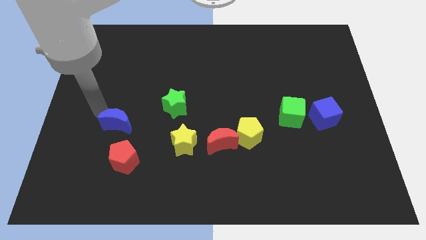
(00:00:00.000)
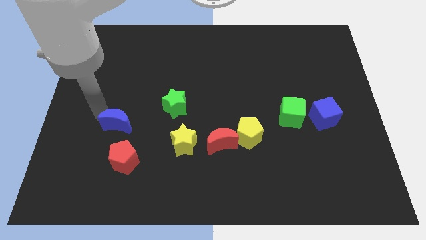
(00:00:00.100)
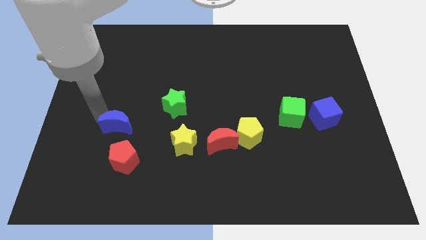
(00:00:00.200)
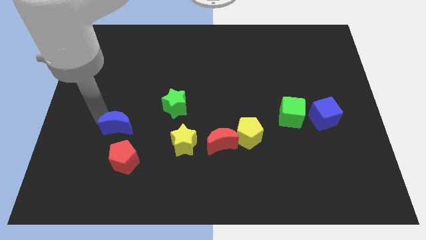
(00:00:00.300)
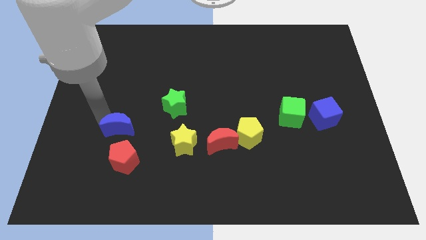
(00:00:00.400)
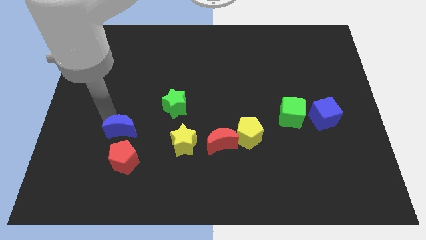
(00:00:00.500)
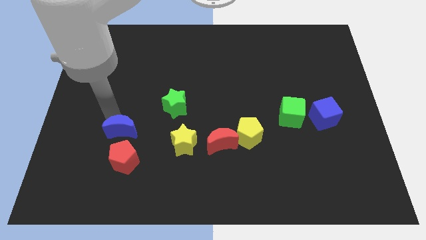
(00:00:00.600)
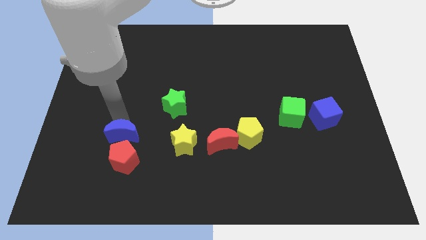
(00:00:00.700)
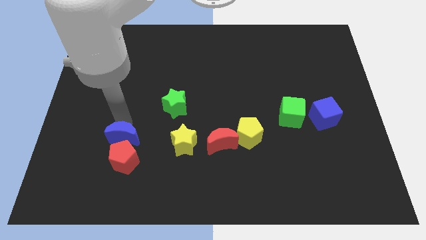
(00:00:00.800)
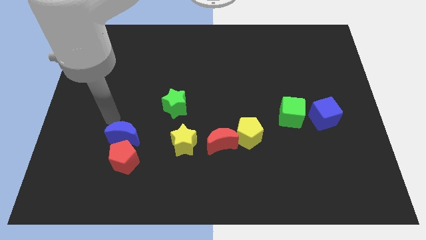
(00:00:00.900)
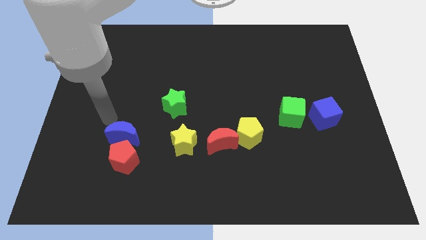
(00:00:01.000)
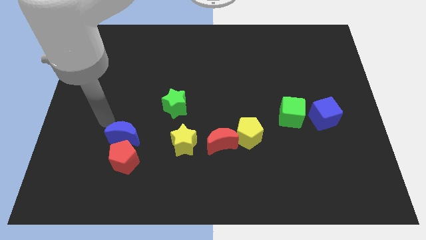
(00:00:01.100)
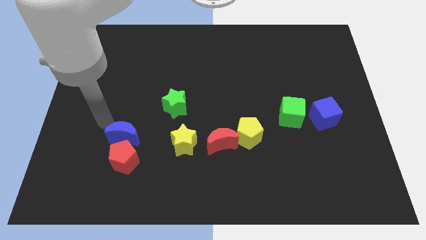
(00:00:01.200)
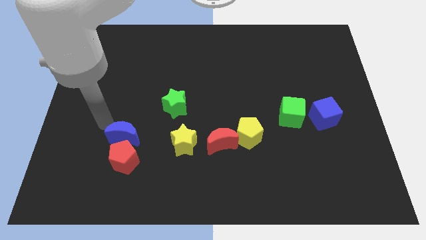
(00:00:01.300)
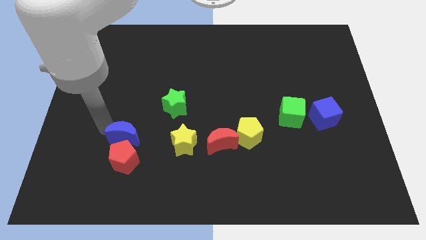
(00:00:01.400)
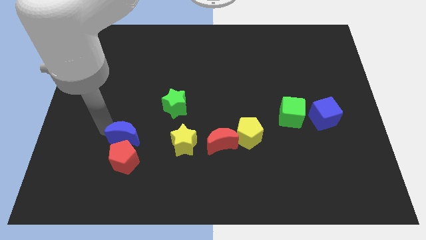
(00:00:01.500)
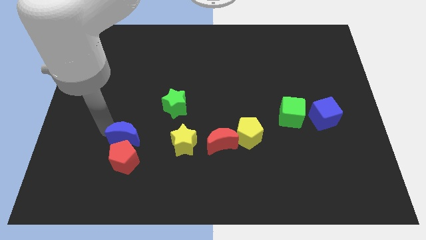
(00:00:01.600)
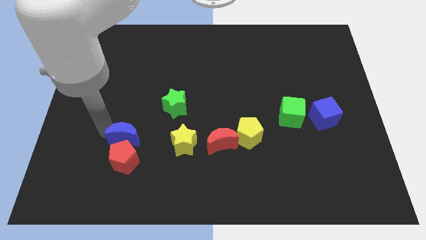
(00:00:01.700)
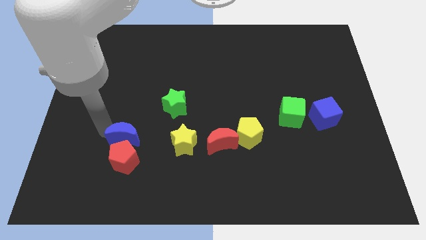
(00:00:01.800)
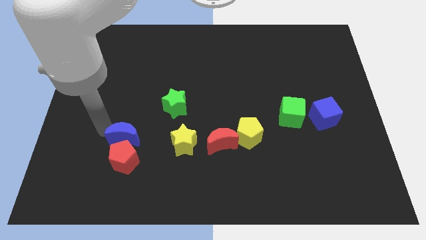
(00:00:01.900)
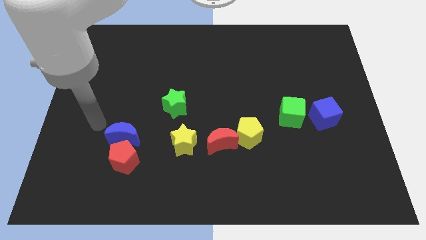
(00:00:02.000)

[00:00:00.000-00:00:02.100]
move blue moon into red pentagon

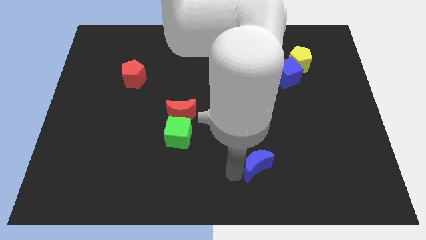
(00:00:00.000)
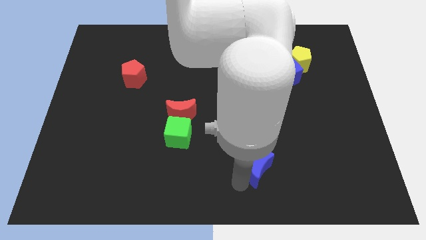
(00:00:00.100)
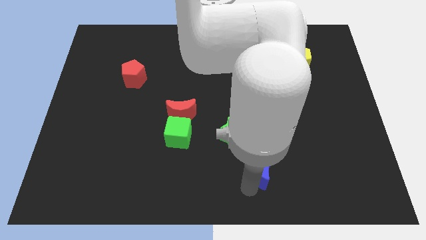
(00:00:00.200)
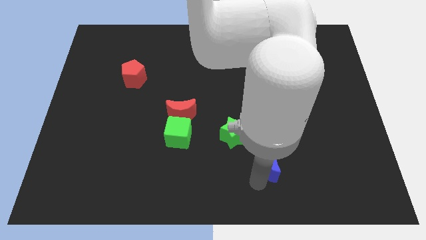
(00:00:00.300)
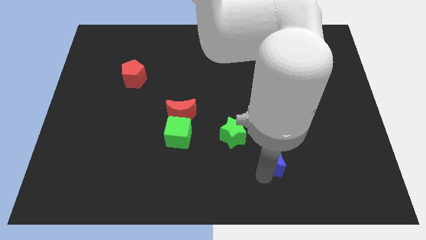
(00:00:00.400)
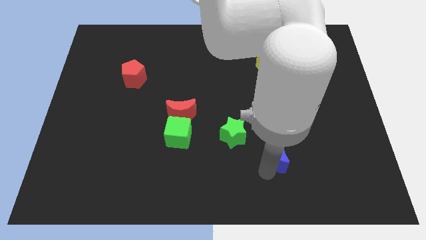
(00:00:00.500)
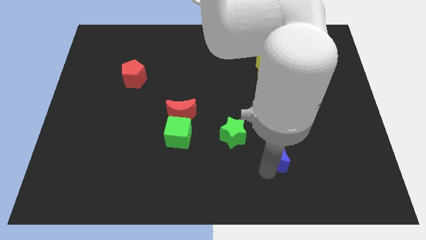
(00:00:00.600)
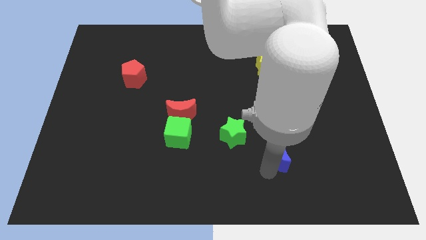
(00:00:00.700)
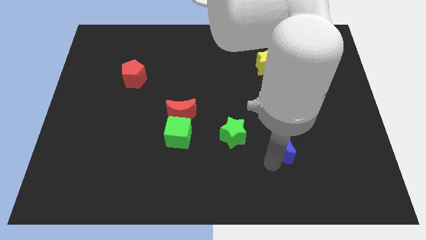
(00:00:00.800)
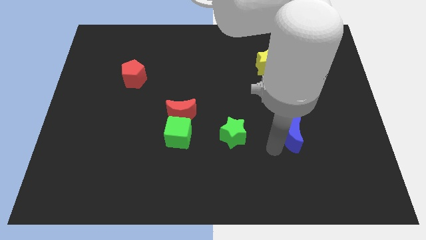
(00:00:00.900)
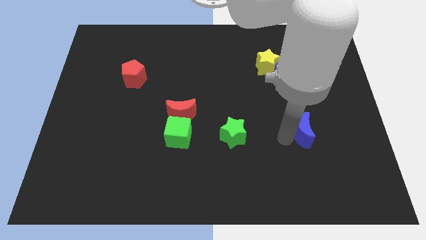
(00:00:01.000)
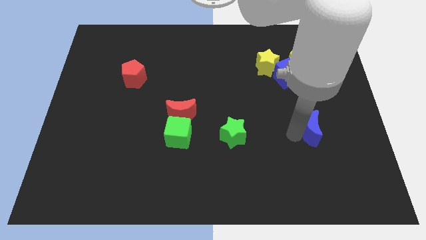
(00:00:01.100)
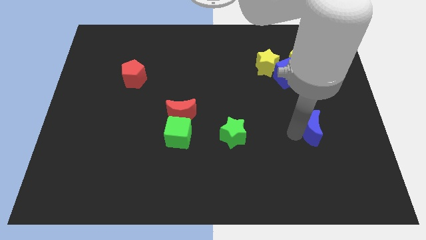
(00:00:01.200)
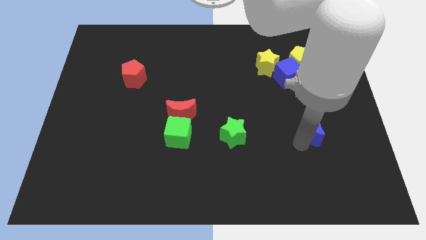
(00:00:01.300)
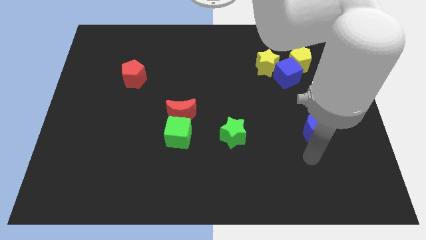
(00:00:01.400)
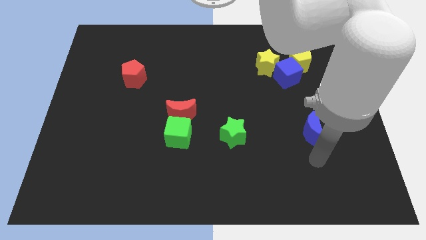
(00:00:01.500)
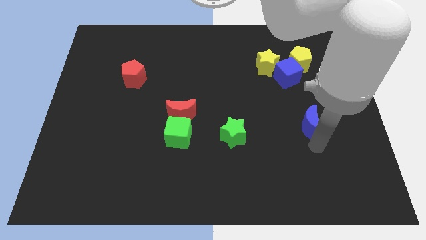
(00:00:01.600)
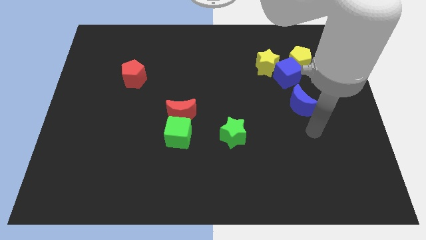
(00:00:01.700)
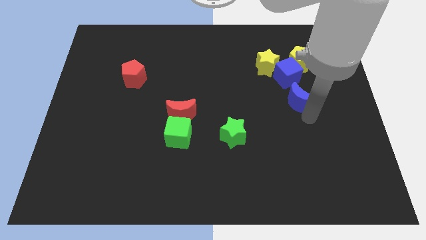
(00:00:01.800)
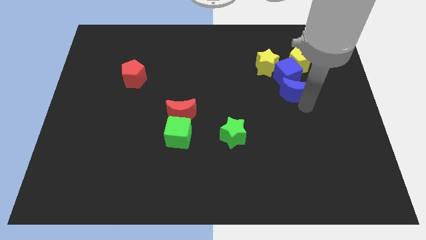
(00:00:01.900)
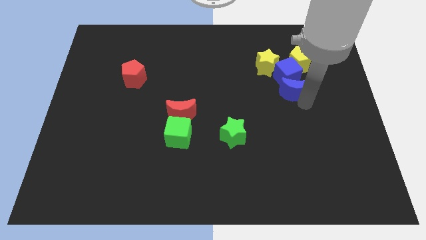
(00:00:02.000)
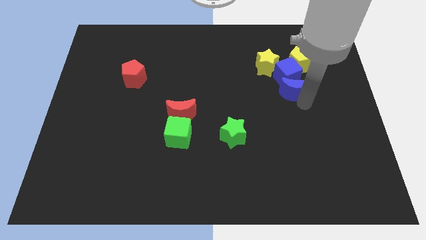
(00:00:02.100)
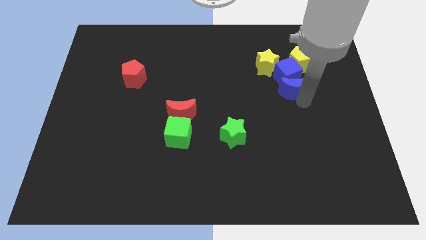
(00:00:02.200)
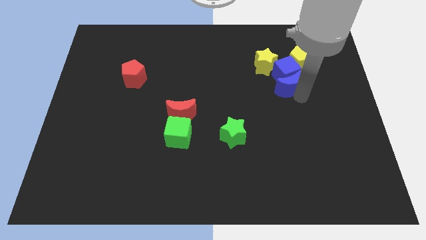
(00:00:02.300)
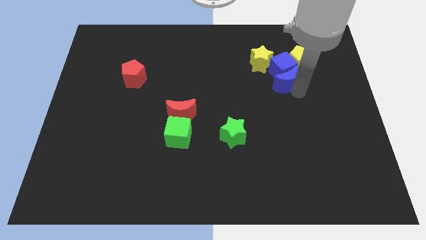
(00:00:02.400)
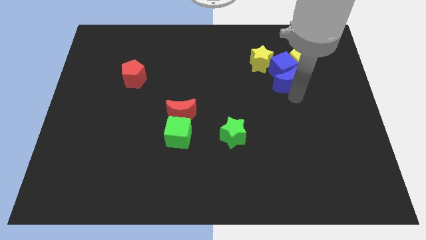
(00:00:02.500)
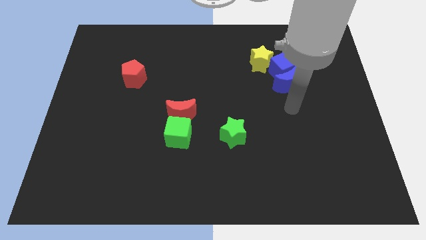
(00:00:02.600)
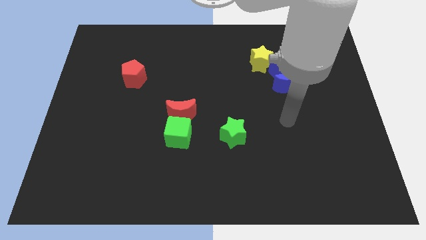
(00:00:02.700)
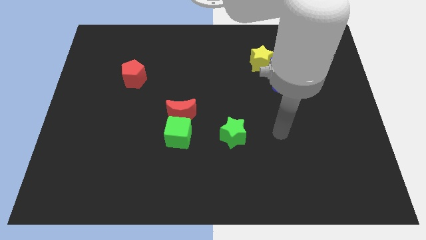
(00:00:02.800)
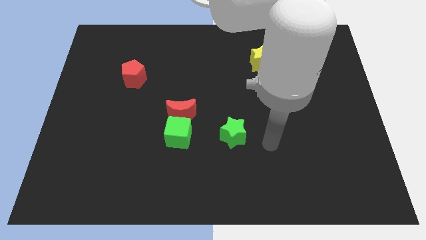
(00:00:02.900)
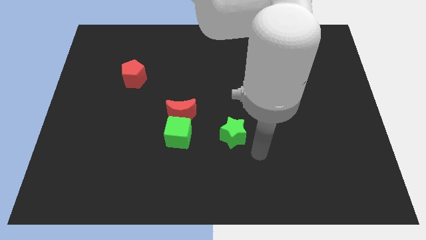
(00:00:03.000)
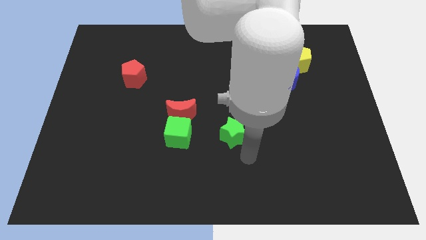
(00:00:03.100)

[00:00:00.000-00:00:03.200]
push the blue moon into the bottom of the blue cube

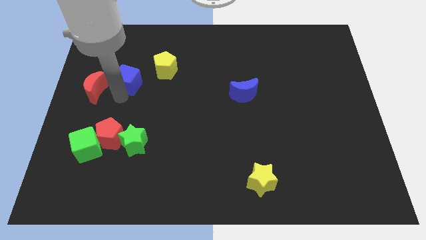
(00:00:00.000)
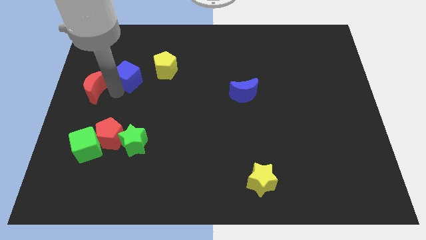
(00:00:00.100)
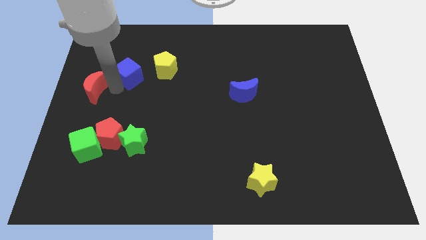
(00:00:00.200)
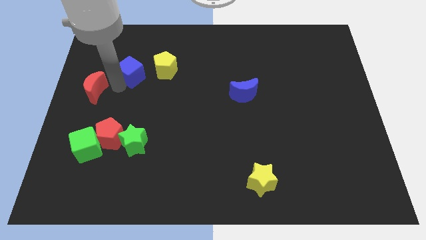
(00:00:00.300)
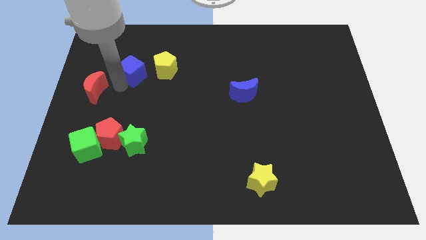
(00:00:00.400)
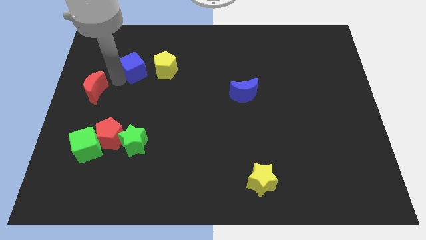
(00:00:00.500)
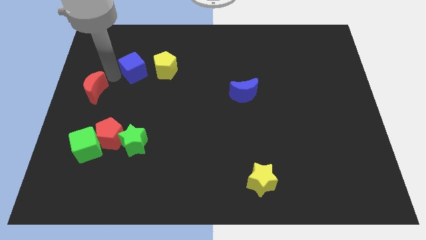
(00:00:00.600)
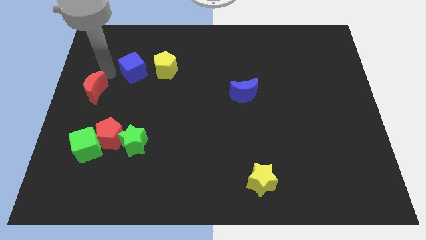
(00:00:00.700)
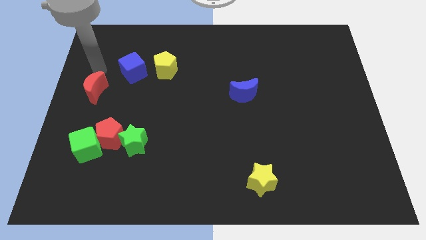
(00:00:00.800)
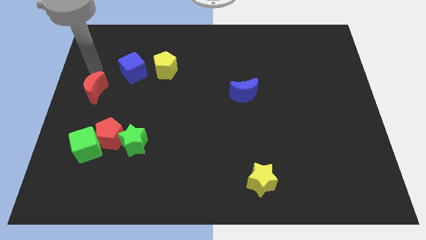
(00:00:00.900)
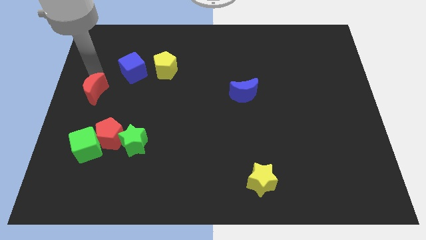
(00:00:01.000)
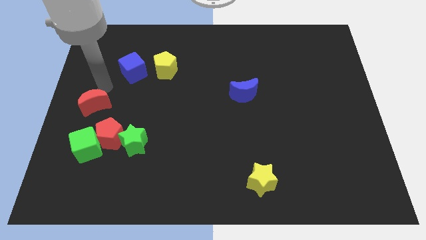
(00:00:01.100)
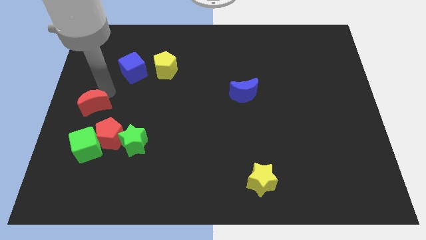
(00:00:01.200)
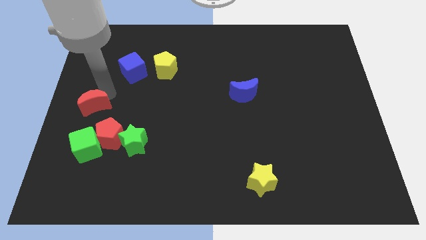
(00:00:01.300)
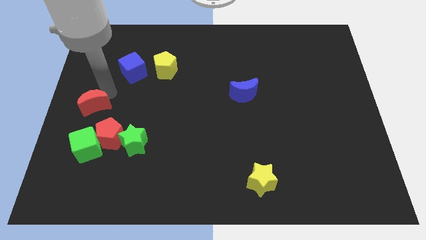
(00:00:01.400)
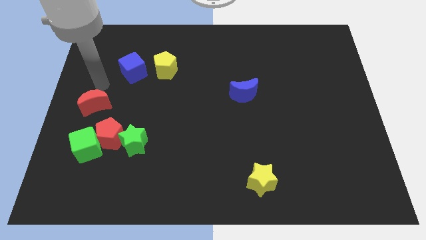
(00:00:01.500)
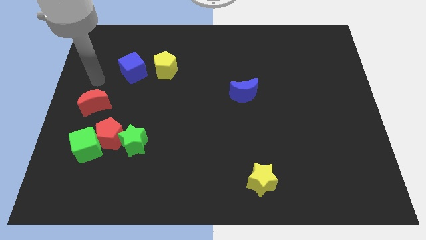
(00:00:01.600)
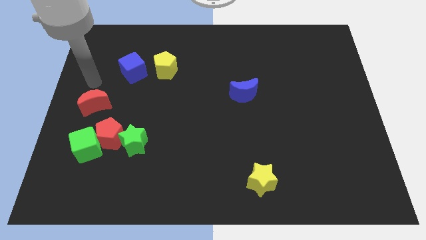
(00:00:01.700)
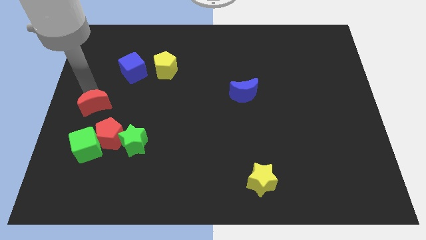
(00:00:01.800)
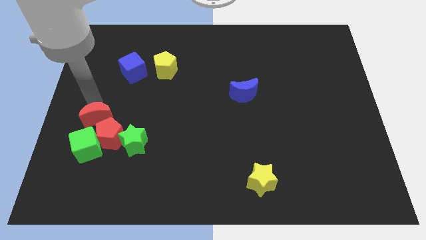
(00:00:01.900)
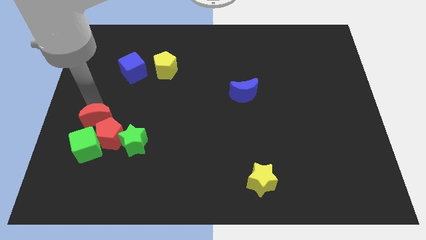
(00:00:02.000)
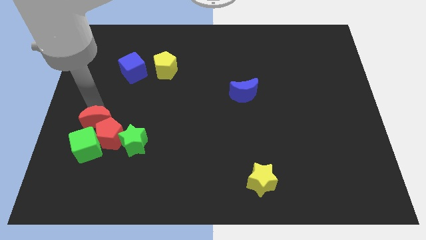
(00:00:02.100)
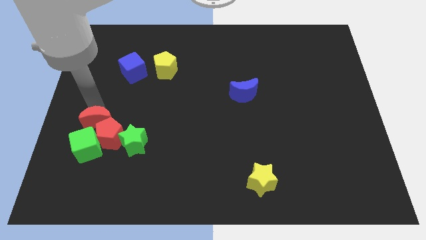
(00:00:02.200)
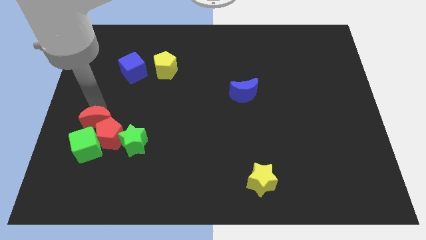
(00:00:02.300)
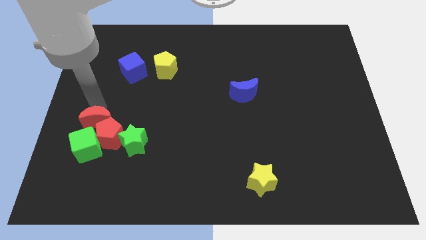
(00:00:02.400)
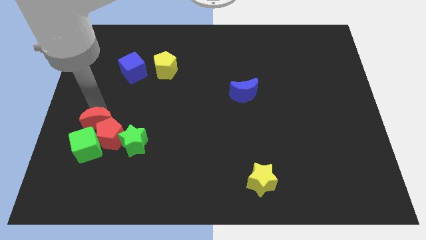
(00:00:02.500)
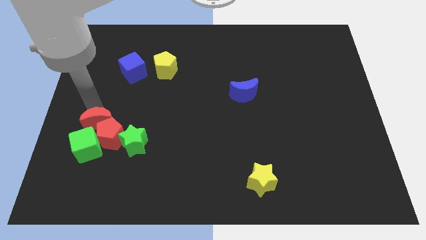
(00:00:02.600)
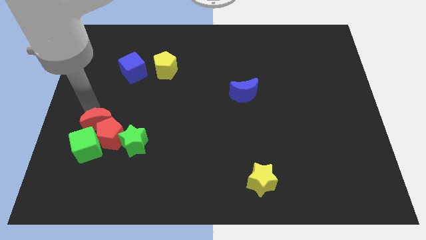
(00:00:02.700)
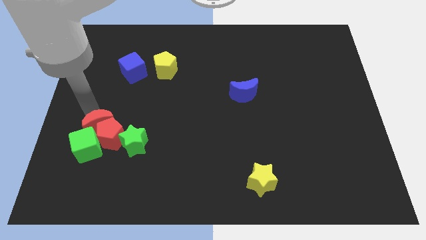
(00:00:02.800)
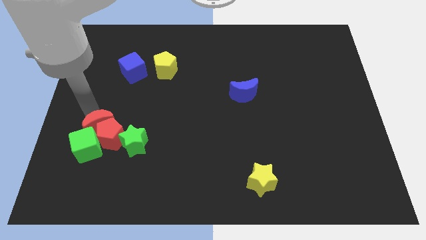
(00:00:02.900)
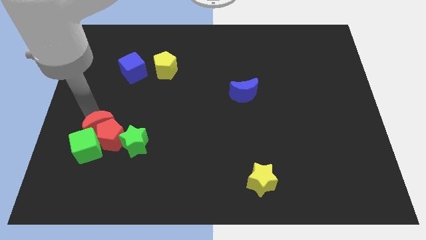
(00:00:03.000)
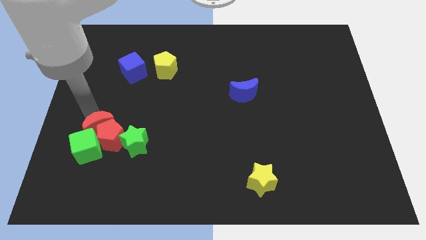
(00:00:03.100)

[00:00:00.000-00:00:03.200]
move the red crescent into the red pentagon

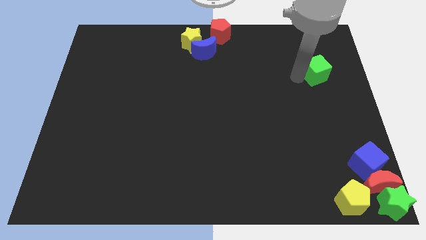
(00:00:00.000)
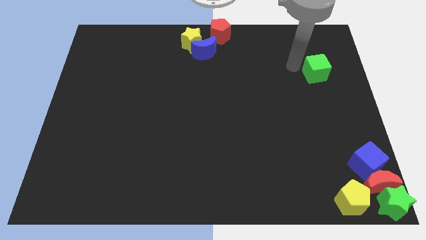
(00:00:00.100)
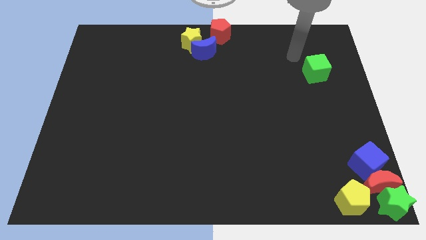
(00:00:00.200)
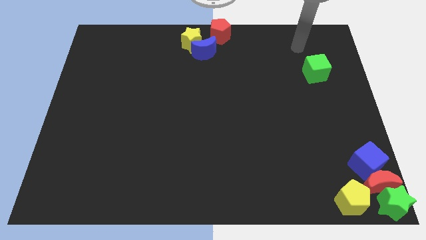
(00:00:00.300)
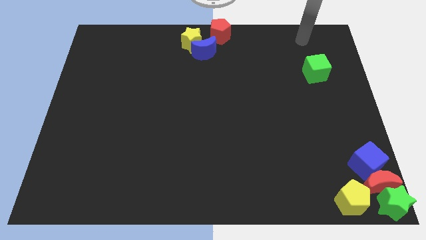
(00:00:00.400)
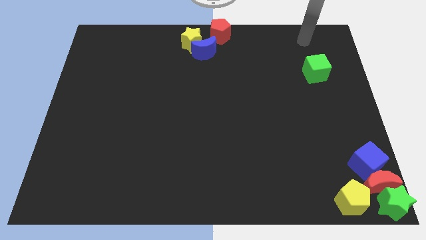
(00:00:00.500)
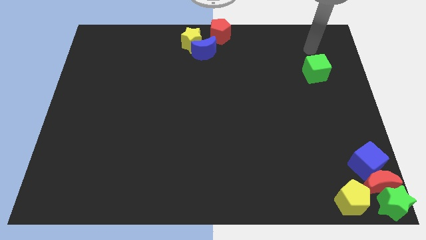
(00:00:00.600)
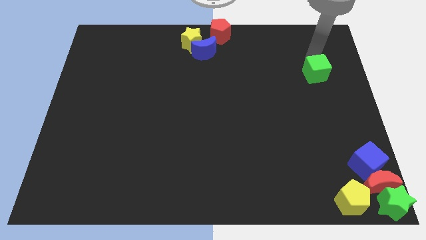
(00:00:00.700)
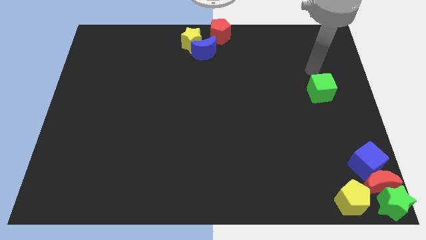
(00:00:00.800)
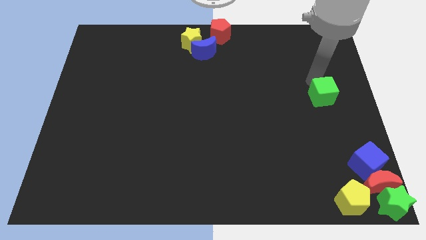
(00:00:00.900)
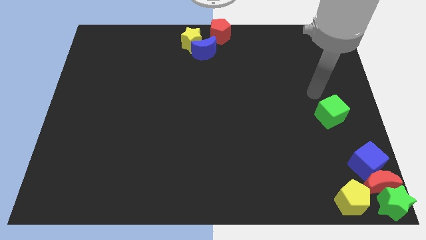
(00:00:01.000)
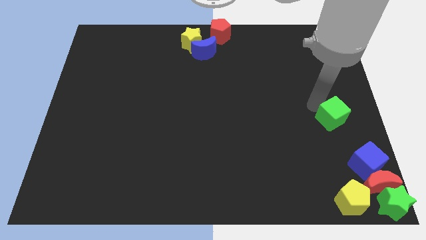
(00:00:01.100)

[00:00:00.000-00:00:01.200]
move the green cube towards down
